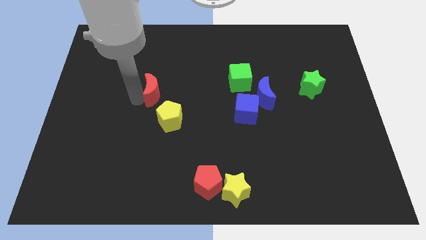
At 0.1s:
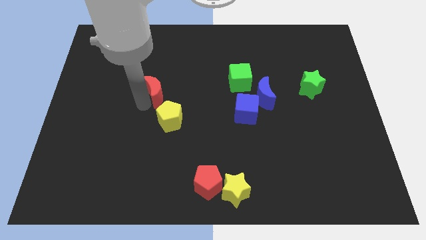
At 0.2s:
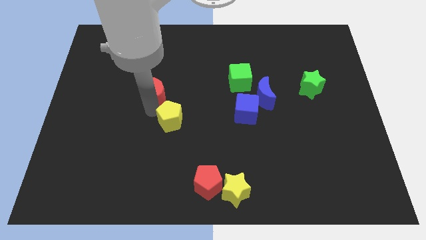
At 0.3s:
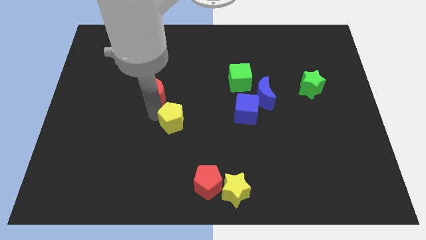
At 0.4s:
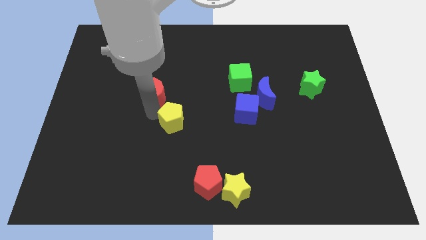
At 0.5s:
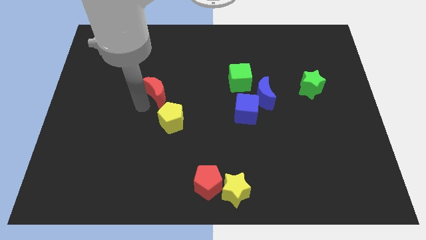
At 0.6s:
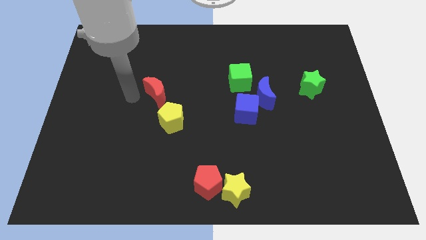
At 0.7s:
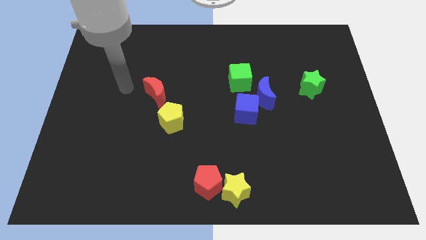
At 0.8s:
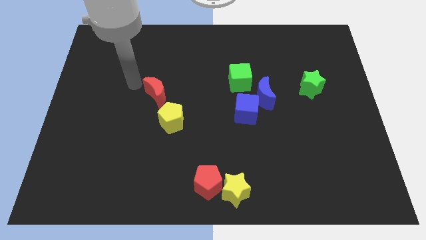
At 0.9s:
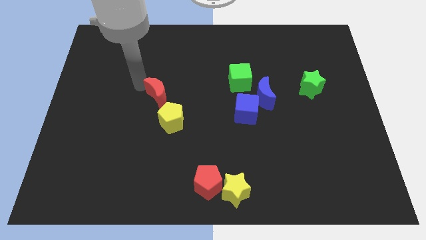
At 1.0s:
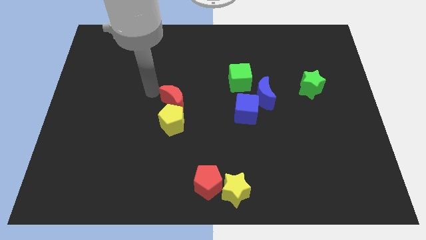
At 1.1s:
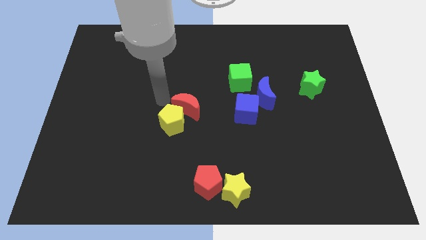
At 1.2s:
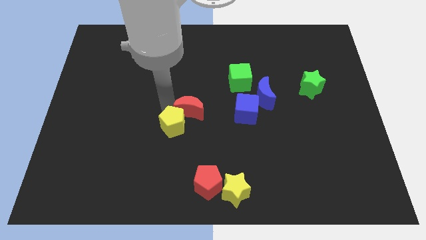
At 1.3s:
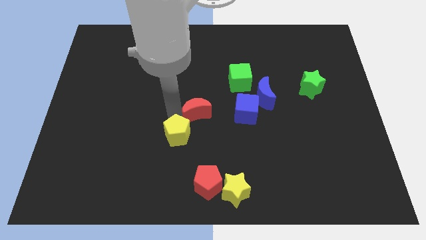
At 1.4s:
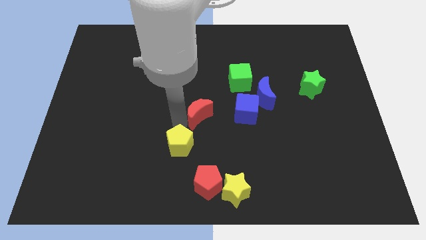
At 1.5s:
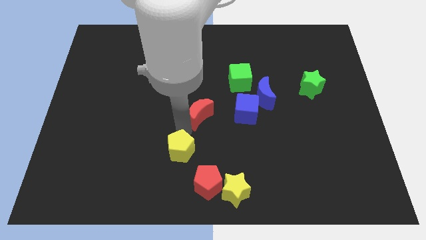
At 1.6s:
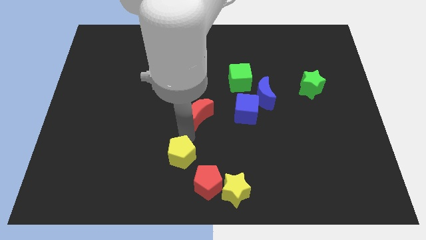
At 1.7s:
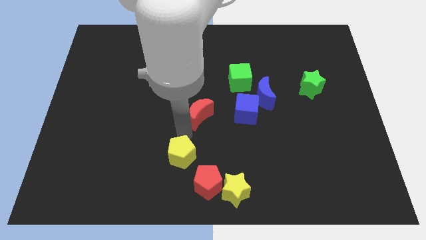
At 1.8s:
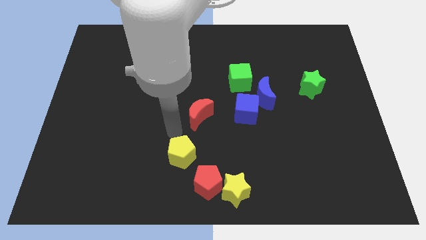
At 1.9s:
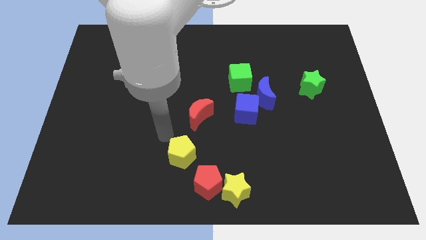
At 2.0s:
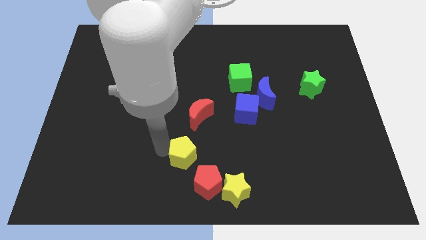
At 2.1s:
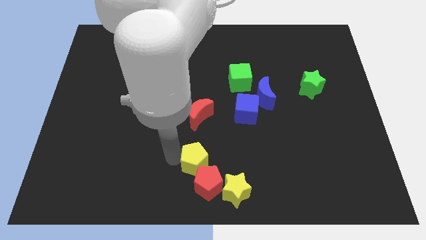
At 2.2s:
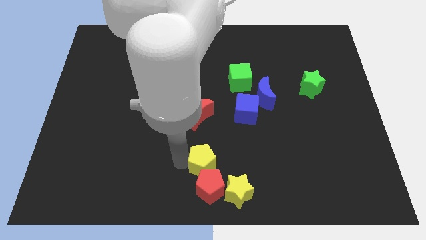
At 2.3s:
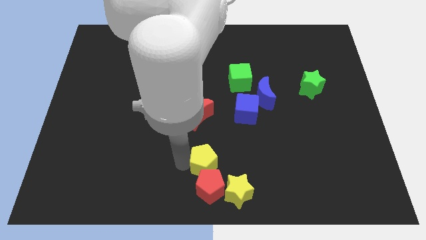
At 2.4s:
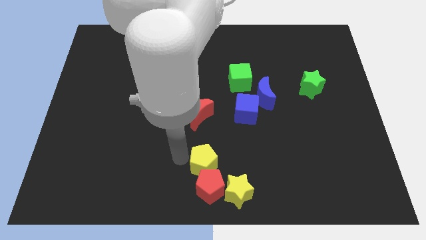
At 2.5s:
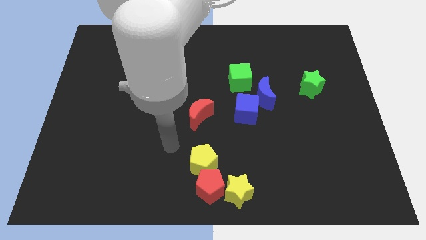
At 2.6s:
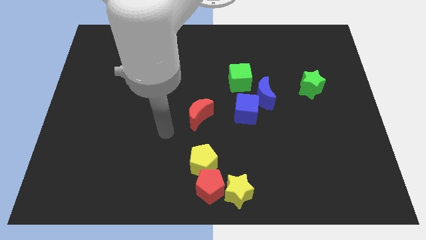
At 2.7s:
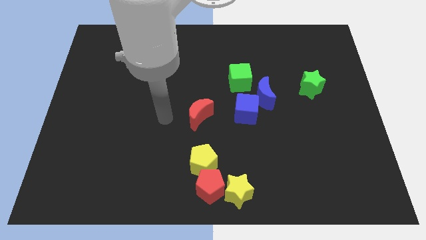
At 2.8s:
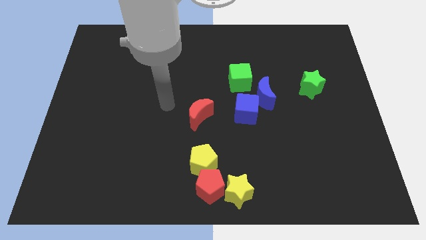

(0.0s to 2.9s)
push the yellow pentagon into the red pentagon

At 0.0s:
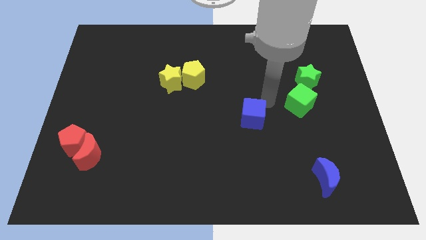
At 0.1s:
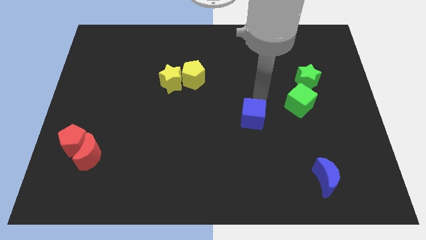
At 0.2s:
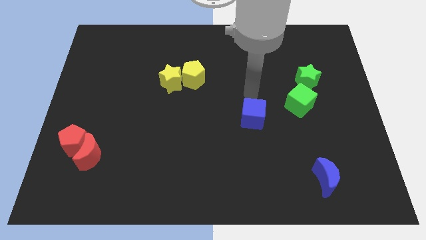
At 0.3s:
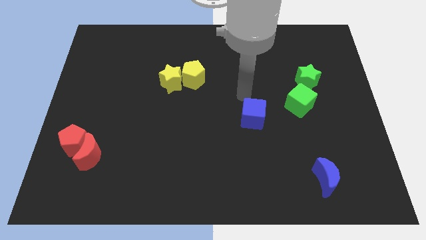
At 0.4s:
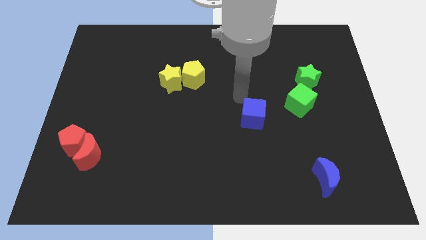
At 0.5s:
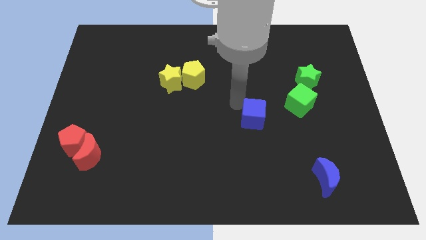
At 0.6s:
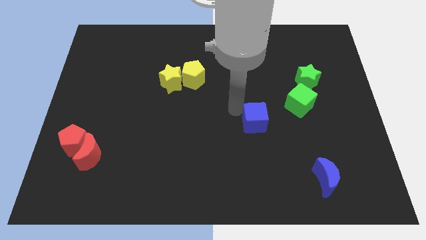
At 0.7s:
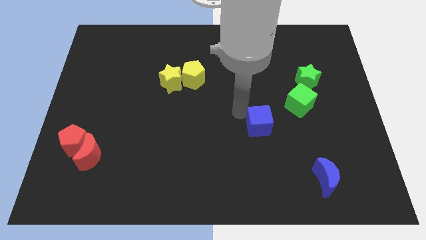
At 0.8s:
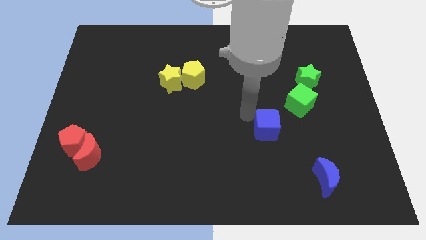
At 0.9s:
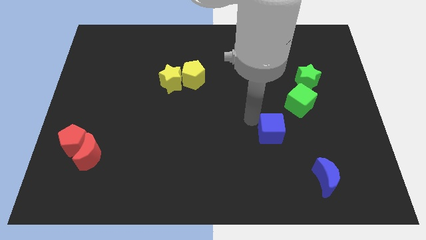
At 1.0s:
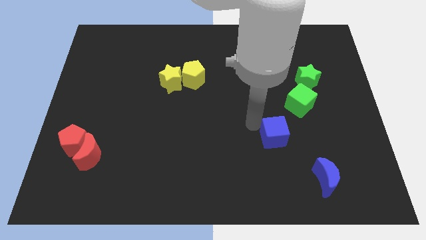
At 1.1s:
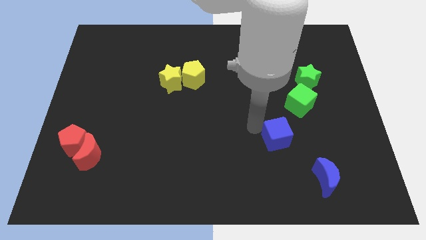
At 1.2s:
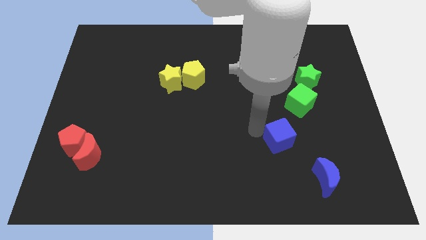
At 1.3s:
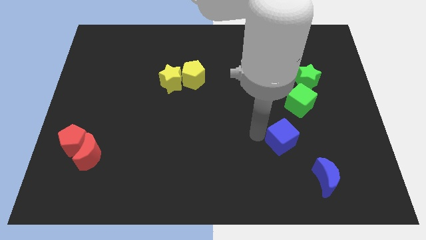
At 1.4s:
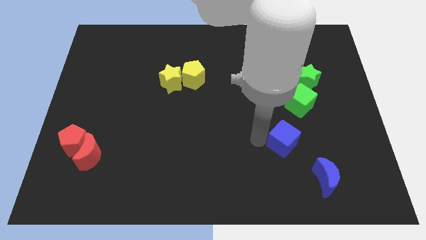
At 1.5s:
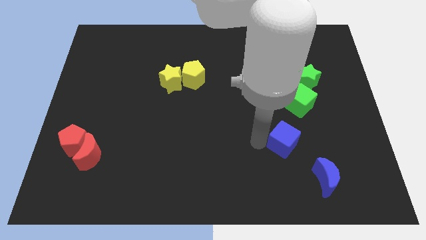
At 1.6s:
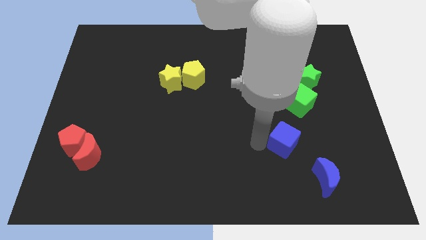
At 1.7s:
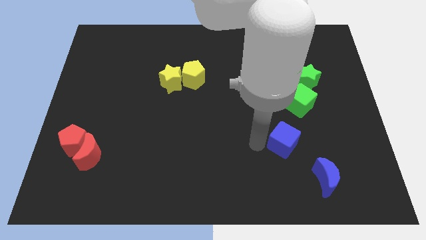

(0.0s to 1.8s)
place the blue cube parallel right to the red blocks

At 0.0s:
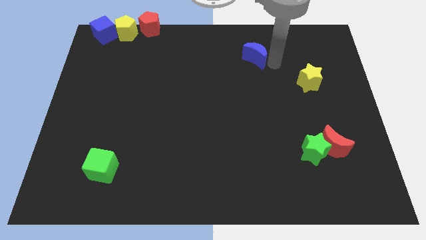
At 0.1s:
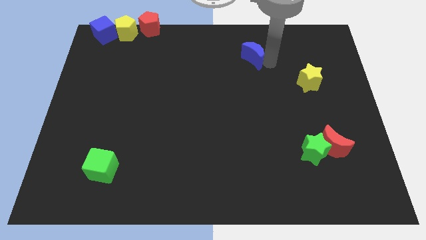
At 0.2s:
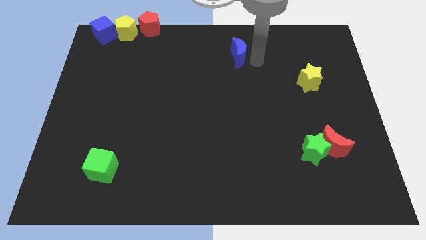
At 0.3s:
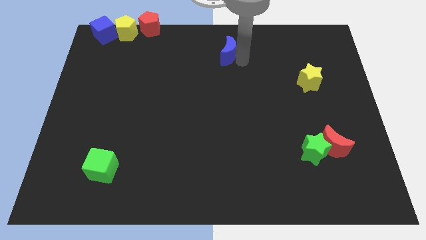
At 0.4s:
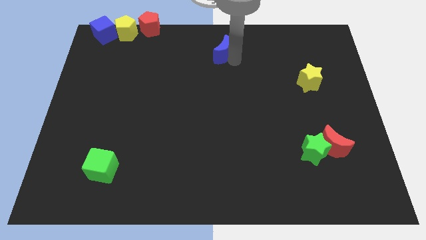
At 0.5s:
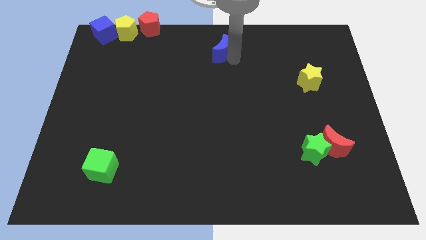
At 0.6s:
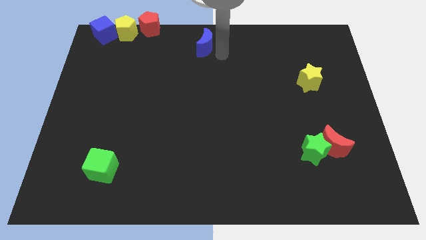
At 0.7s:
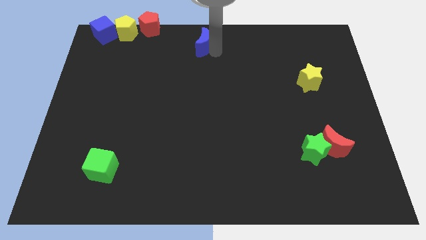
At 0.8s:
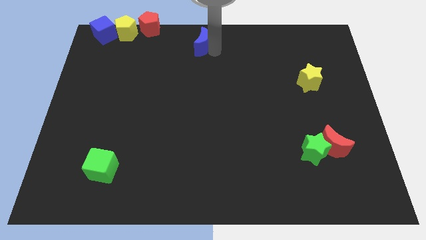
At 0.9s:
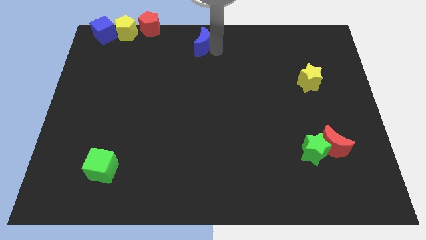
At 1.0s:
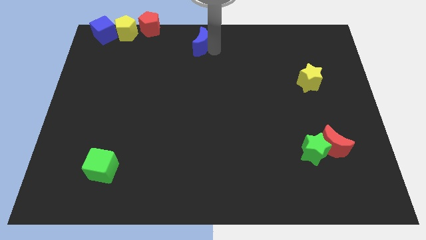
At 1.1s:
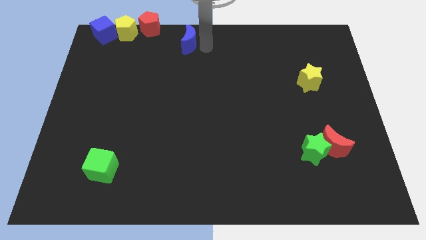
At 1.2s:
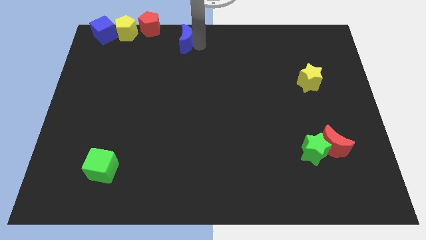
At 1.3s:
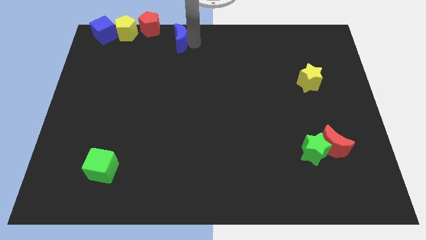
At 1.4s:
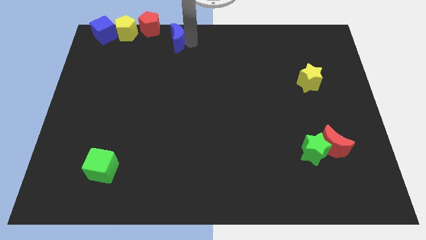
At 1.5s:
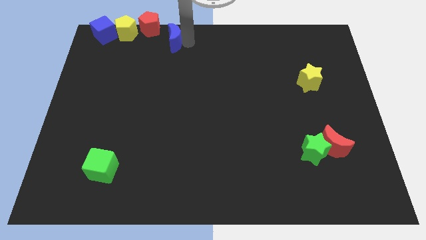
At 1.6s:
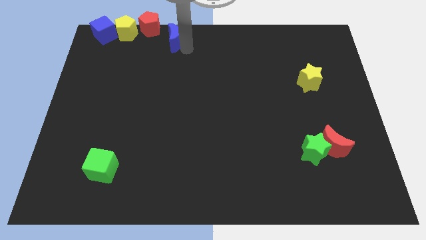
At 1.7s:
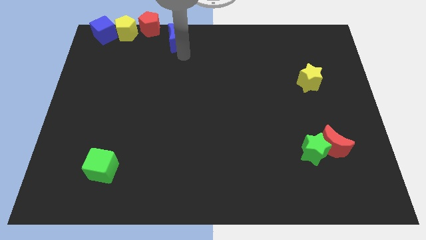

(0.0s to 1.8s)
push the blue crescent towards the red pentagon

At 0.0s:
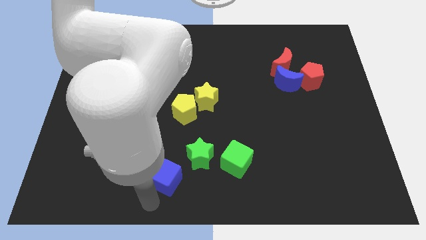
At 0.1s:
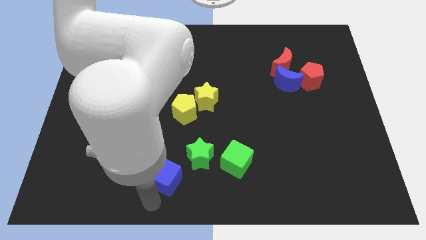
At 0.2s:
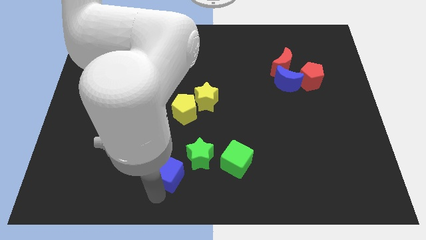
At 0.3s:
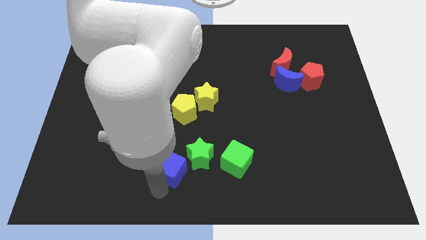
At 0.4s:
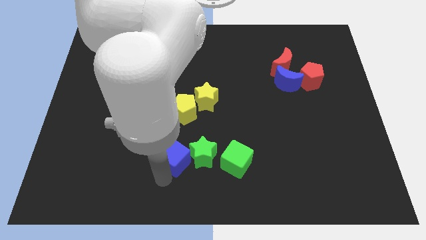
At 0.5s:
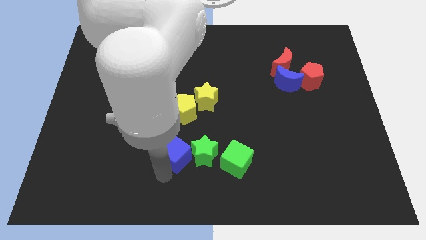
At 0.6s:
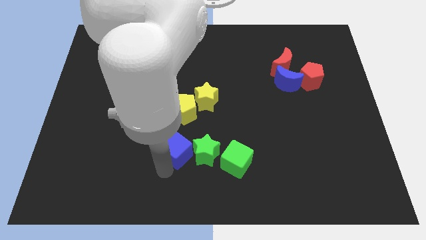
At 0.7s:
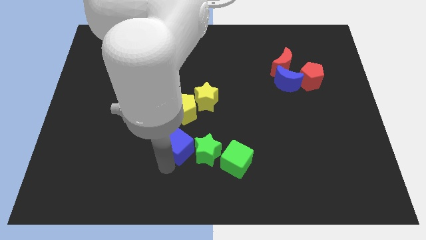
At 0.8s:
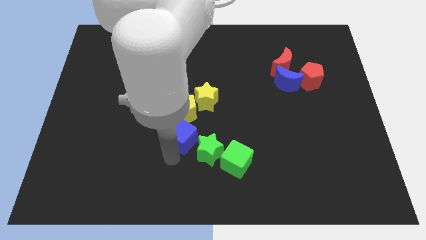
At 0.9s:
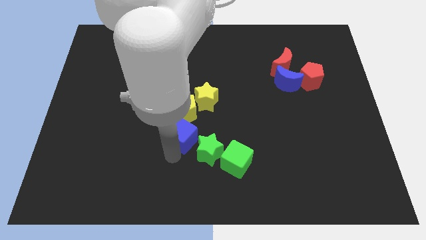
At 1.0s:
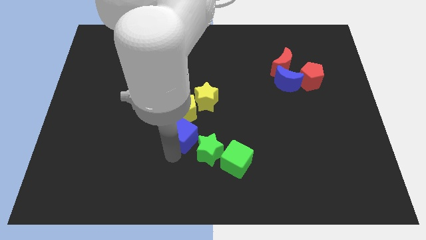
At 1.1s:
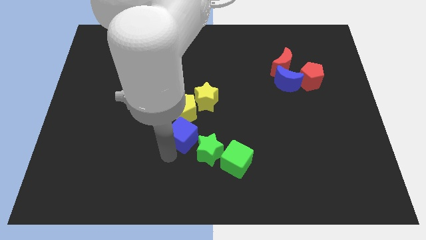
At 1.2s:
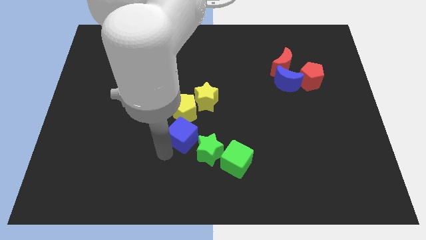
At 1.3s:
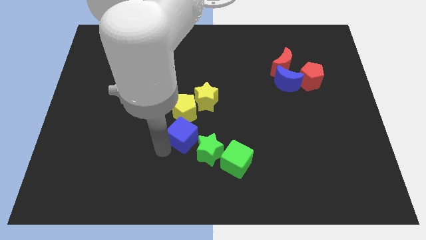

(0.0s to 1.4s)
place blue cube in between yellow pentagon and green star

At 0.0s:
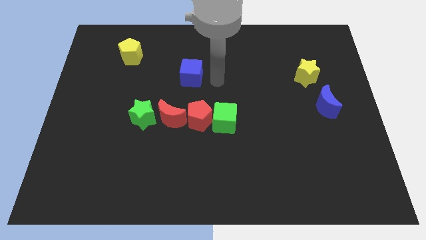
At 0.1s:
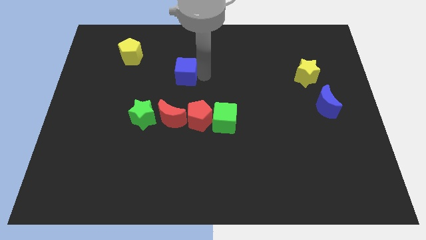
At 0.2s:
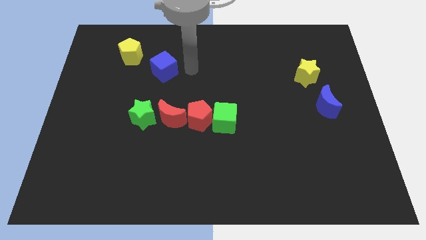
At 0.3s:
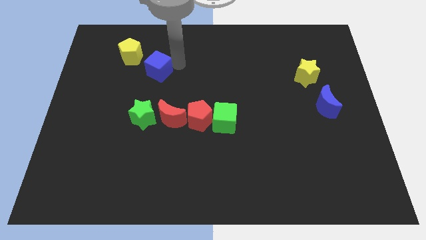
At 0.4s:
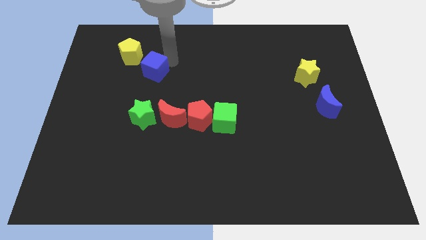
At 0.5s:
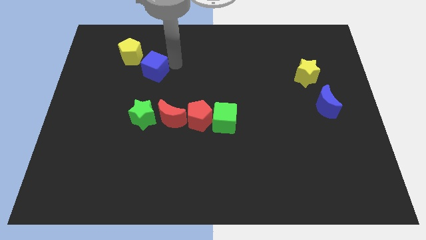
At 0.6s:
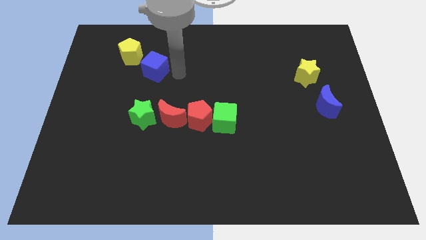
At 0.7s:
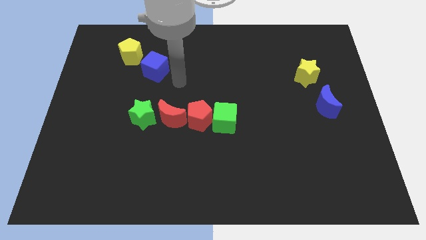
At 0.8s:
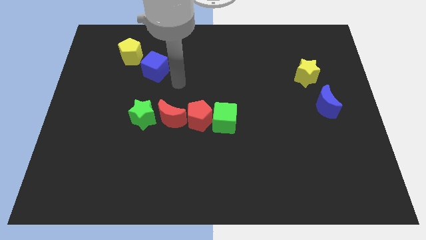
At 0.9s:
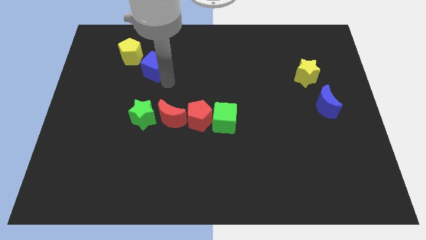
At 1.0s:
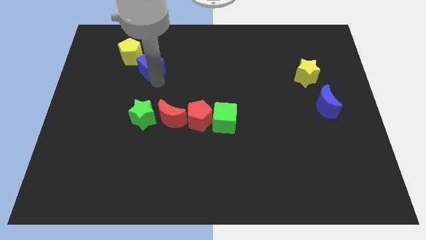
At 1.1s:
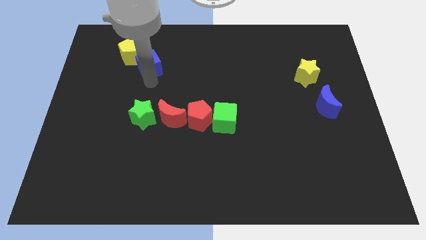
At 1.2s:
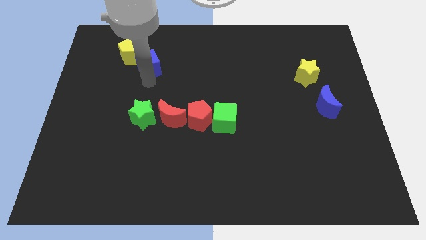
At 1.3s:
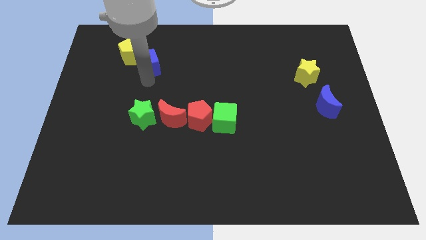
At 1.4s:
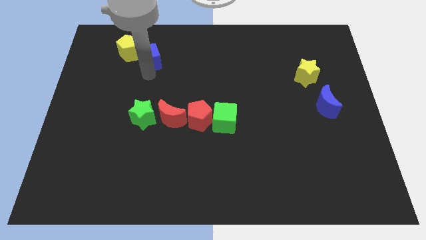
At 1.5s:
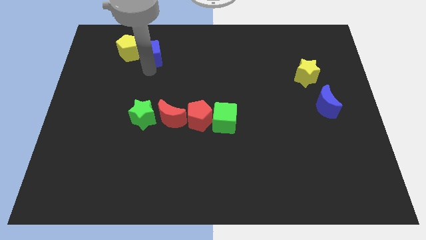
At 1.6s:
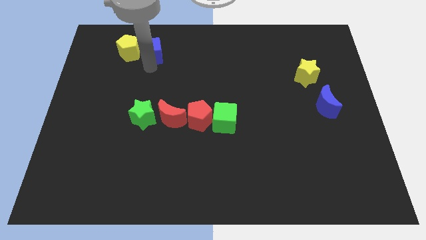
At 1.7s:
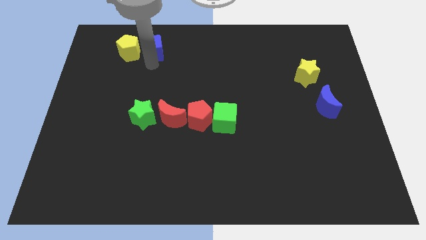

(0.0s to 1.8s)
place the blue cube right to the yellow pentagon
